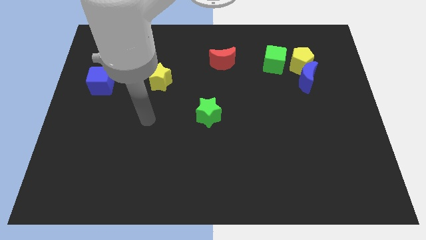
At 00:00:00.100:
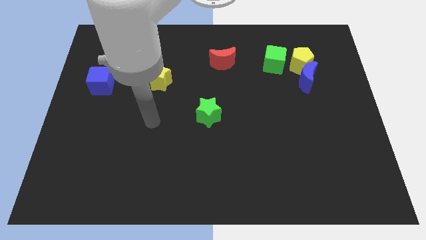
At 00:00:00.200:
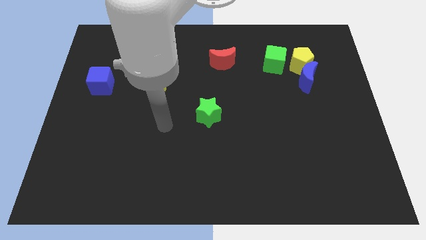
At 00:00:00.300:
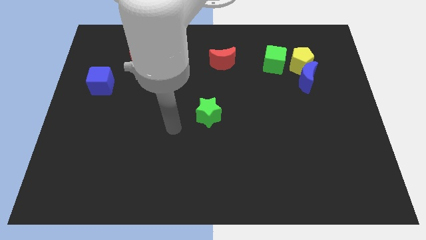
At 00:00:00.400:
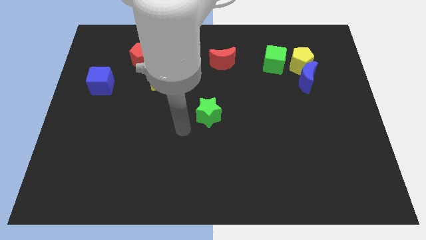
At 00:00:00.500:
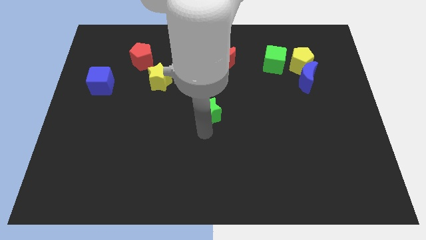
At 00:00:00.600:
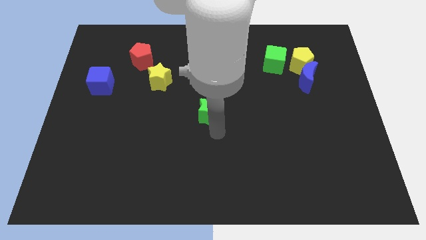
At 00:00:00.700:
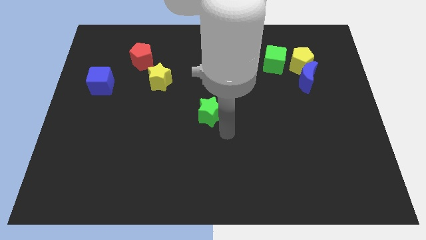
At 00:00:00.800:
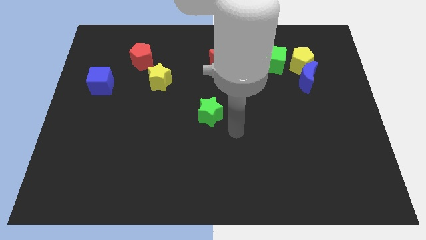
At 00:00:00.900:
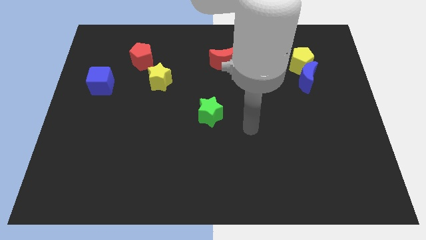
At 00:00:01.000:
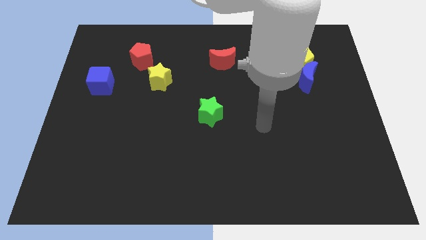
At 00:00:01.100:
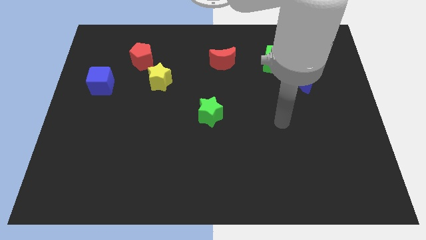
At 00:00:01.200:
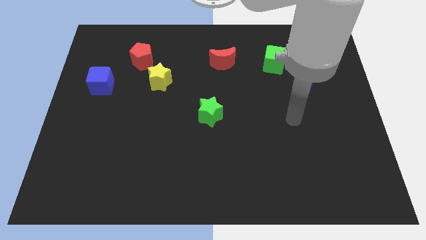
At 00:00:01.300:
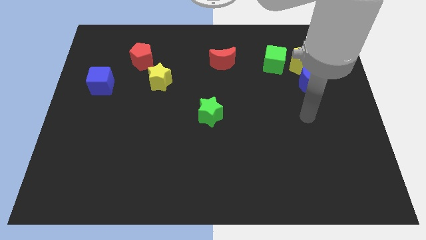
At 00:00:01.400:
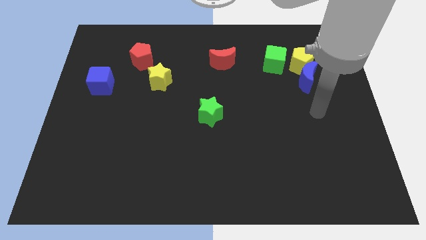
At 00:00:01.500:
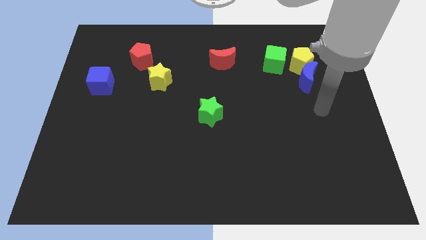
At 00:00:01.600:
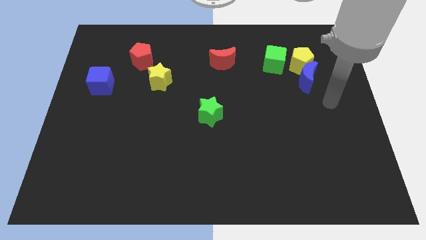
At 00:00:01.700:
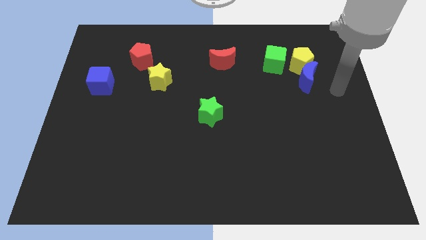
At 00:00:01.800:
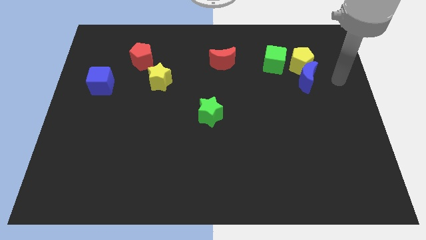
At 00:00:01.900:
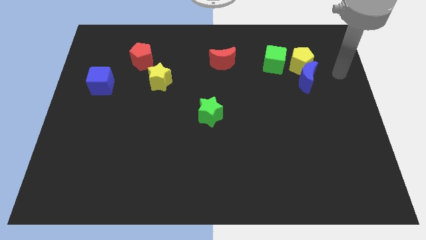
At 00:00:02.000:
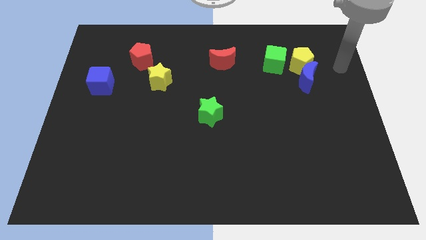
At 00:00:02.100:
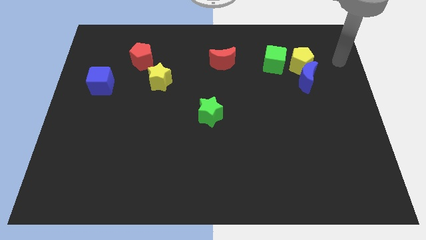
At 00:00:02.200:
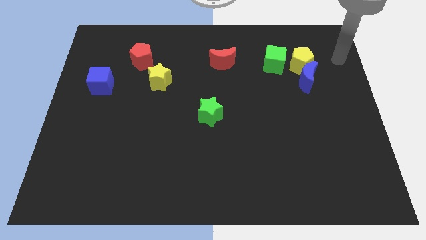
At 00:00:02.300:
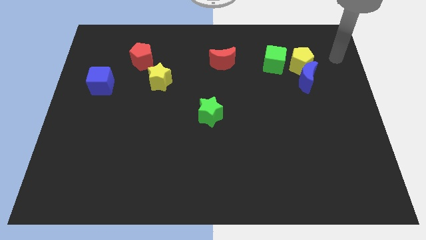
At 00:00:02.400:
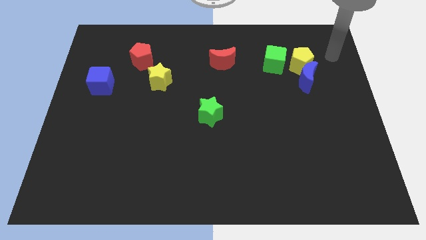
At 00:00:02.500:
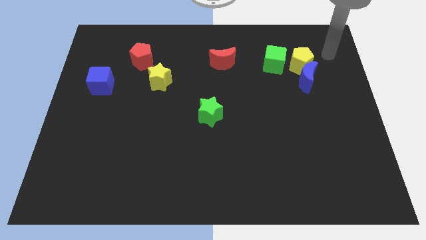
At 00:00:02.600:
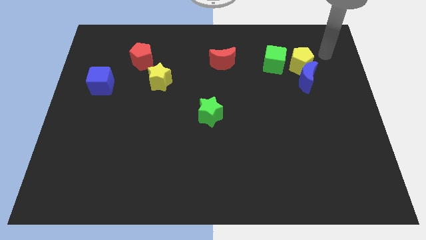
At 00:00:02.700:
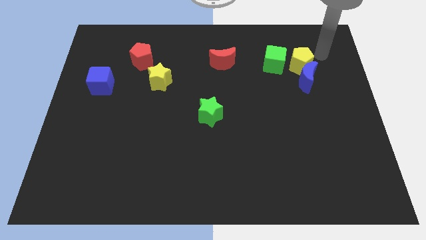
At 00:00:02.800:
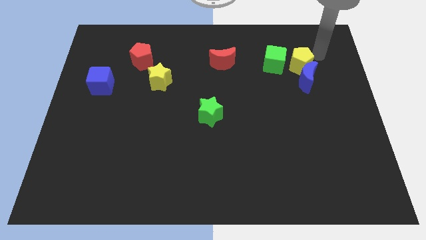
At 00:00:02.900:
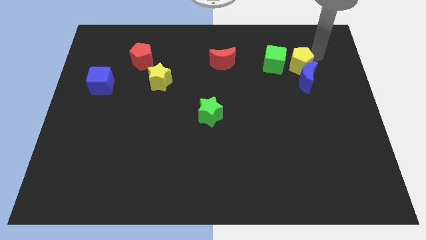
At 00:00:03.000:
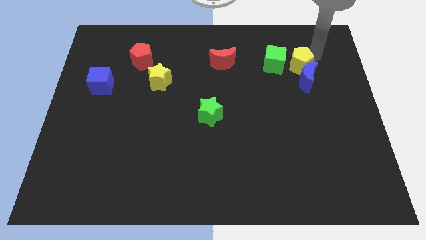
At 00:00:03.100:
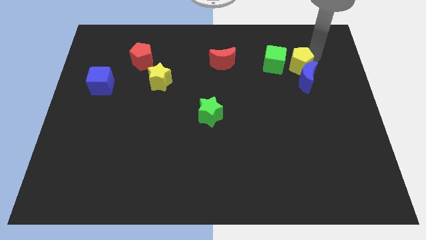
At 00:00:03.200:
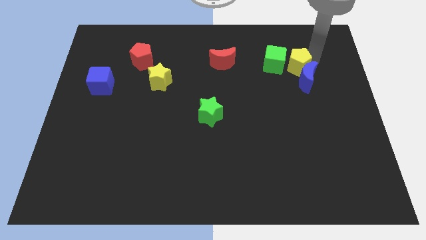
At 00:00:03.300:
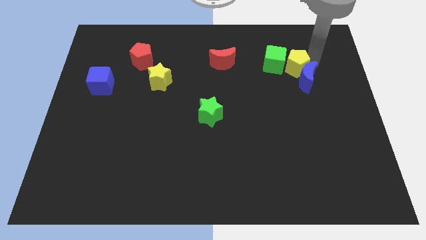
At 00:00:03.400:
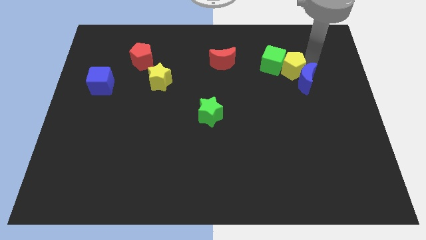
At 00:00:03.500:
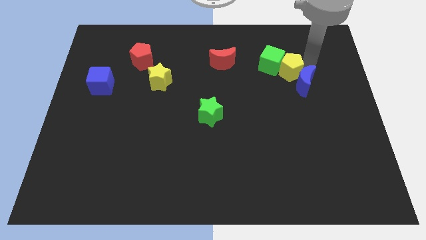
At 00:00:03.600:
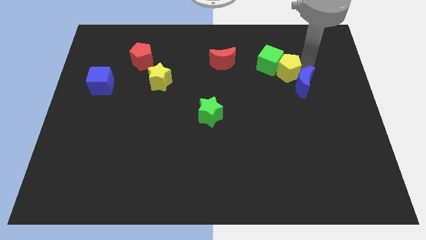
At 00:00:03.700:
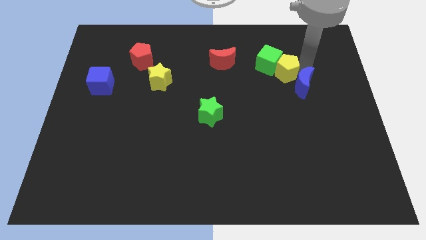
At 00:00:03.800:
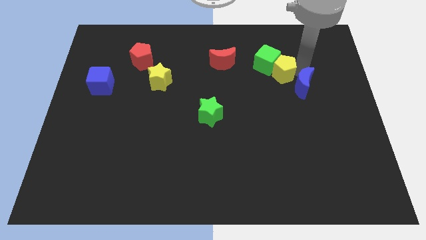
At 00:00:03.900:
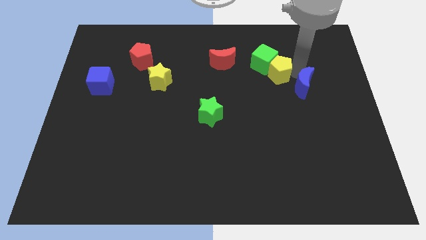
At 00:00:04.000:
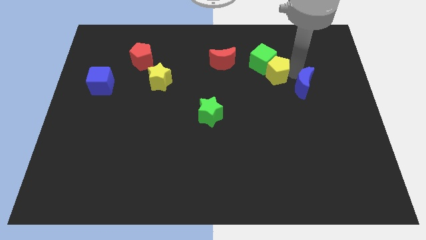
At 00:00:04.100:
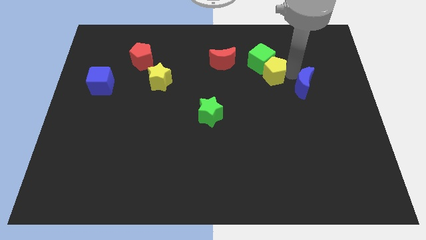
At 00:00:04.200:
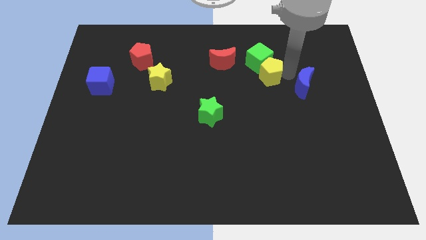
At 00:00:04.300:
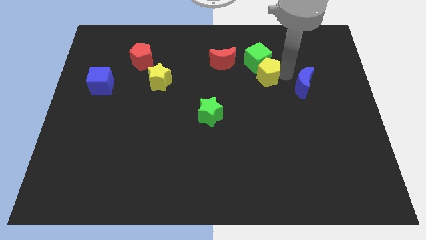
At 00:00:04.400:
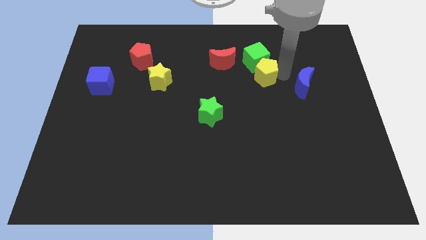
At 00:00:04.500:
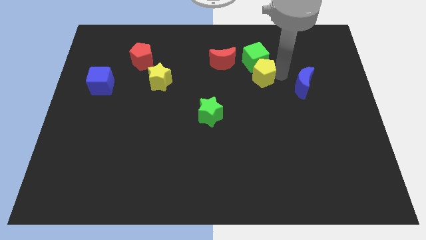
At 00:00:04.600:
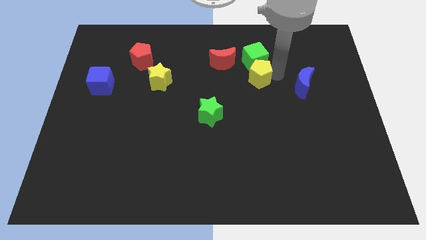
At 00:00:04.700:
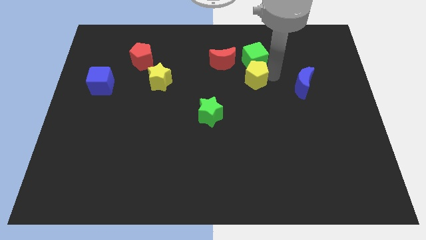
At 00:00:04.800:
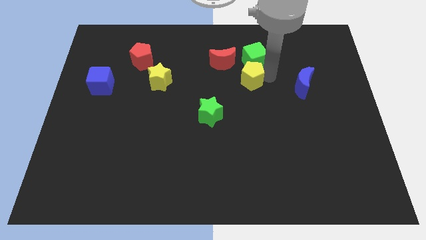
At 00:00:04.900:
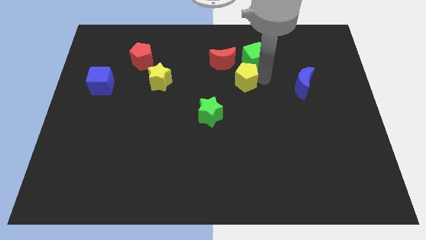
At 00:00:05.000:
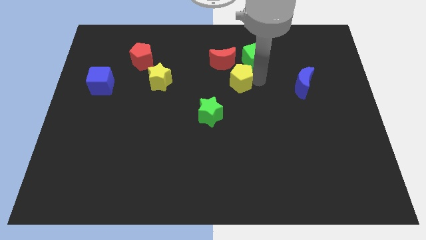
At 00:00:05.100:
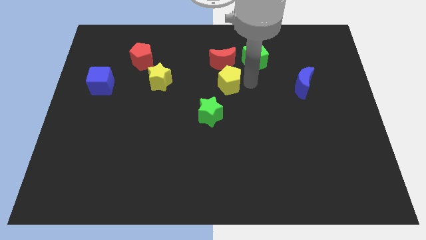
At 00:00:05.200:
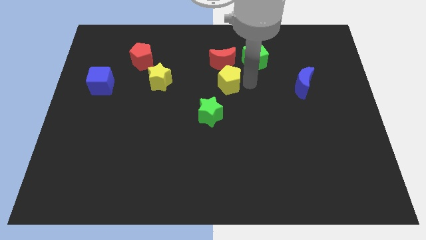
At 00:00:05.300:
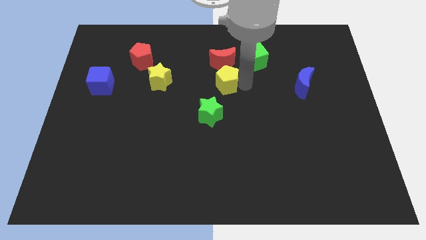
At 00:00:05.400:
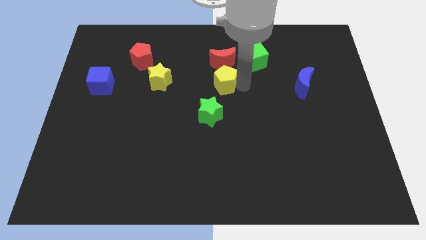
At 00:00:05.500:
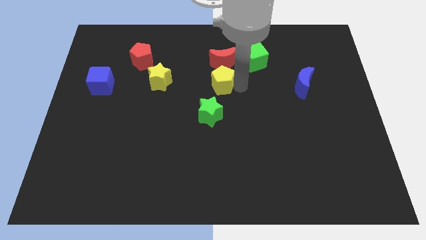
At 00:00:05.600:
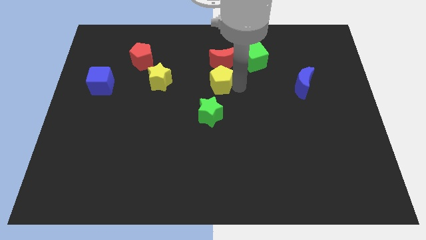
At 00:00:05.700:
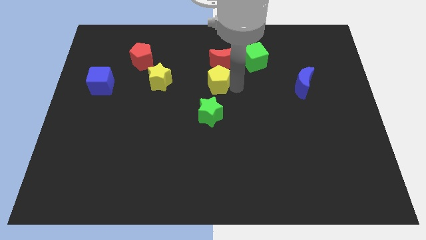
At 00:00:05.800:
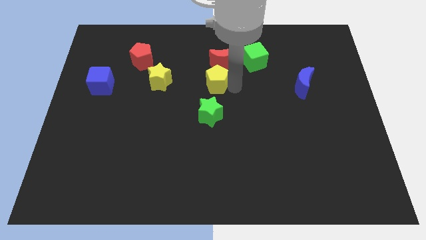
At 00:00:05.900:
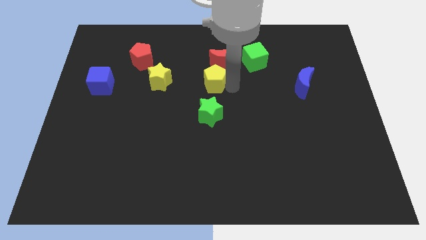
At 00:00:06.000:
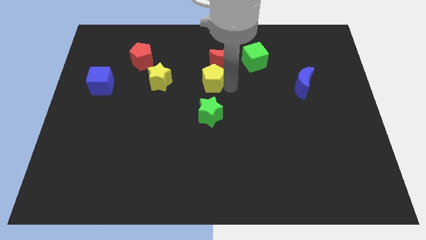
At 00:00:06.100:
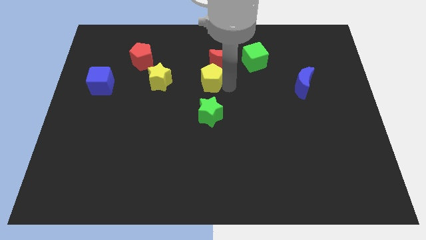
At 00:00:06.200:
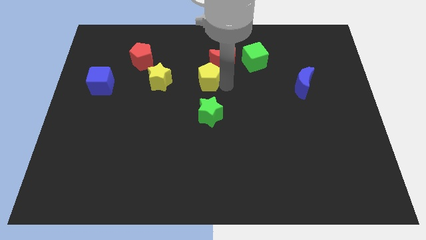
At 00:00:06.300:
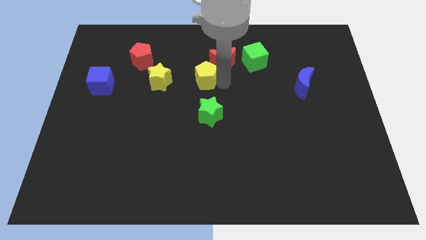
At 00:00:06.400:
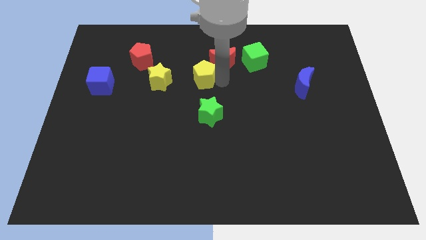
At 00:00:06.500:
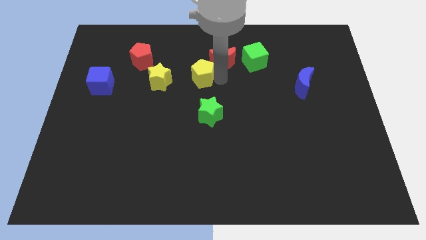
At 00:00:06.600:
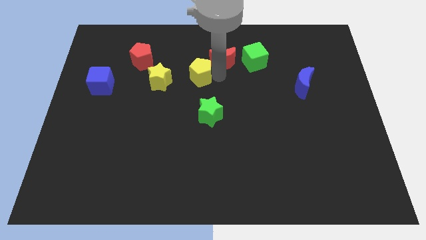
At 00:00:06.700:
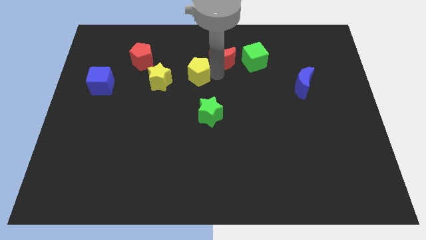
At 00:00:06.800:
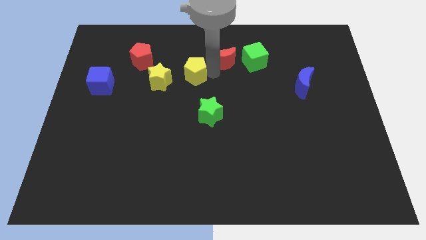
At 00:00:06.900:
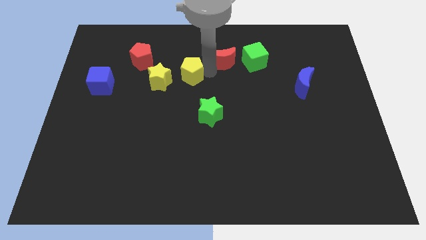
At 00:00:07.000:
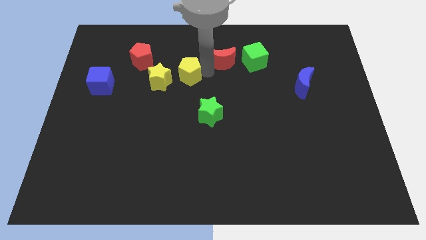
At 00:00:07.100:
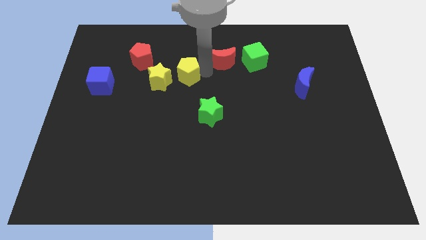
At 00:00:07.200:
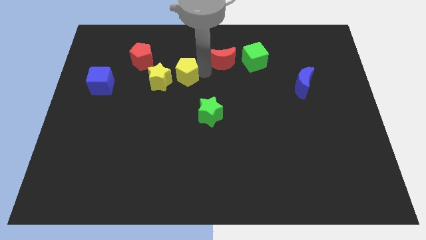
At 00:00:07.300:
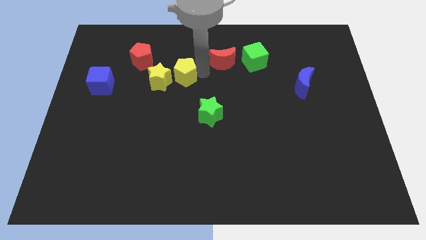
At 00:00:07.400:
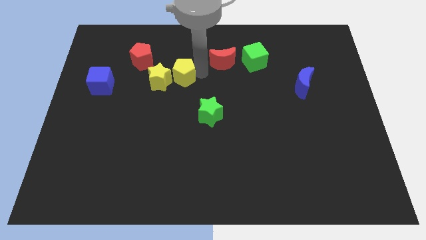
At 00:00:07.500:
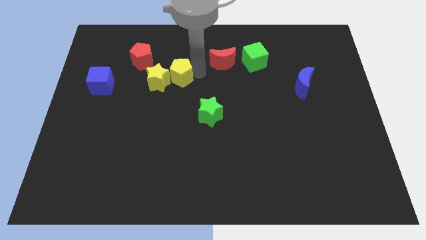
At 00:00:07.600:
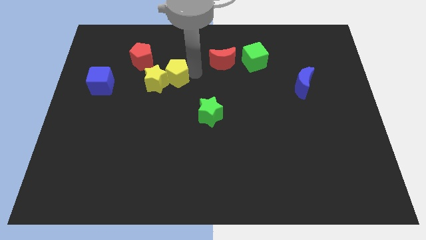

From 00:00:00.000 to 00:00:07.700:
put the yellow pentagon to the yellow star

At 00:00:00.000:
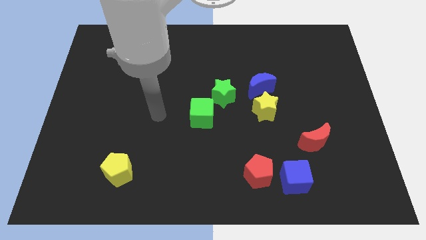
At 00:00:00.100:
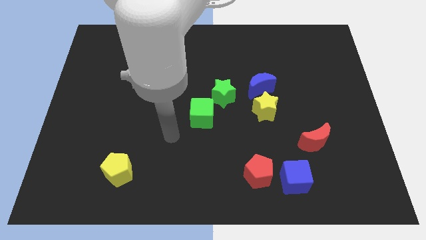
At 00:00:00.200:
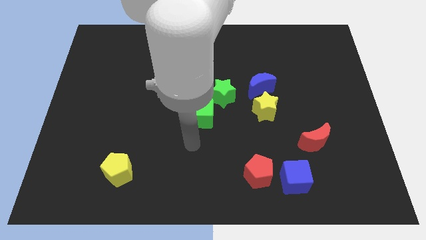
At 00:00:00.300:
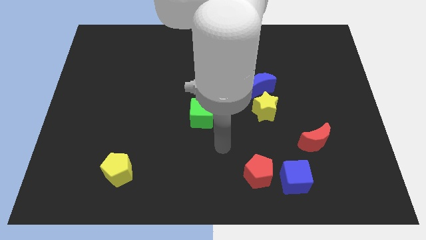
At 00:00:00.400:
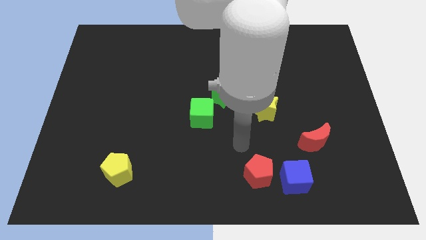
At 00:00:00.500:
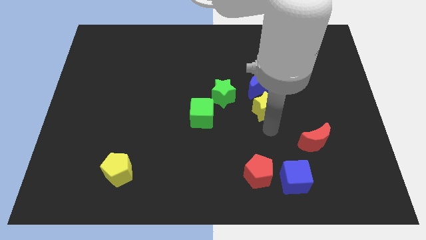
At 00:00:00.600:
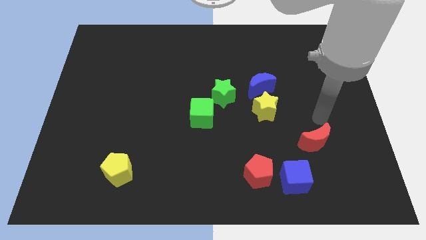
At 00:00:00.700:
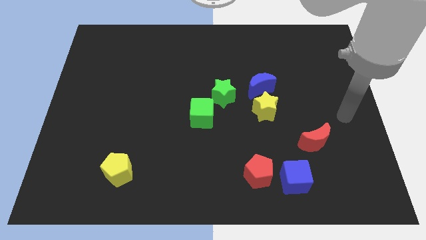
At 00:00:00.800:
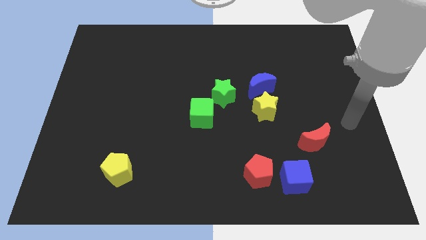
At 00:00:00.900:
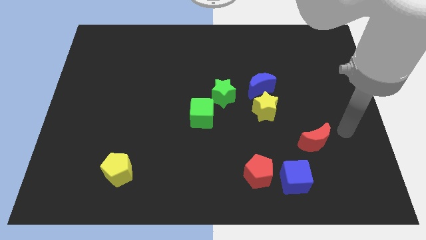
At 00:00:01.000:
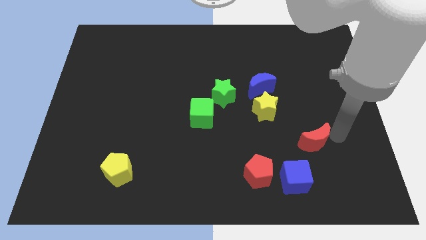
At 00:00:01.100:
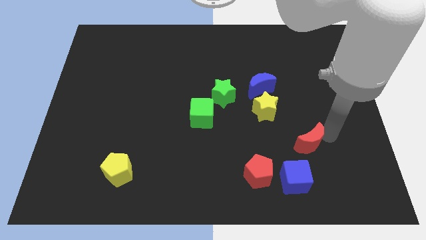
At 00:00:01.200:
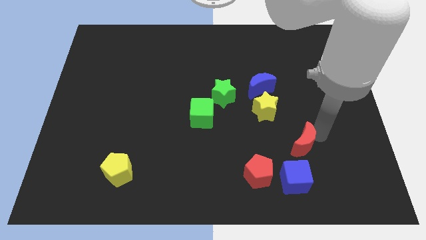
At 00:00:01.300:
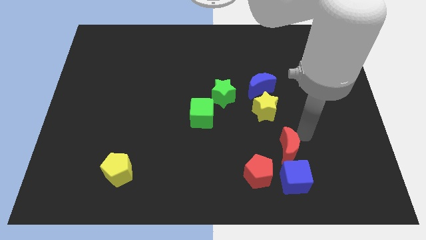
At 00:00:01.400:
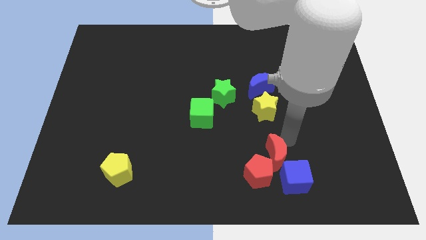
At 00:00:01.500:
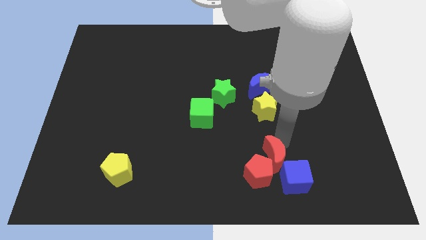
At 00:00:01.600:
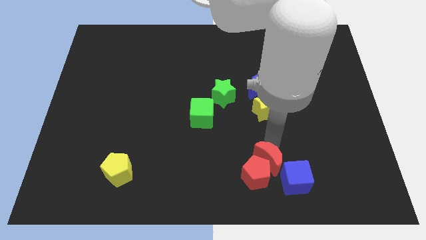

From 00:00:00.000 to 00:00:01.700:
put the red moon close to the red pentagon
